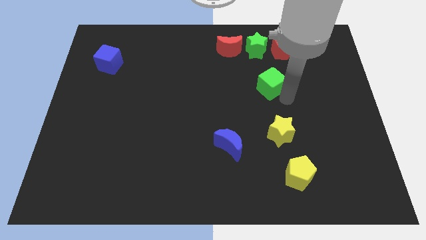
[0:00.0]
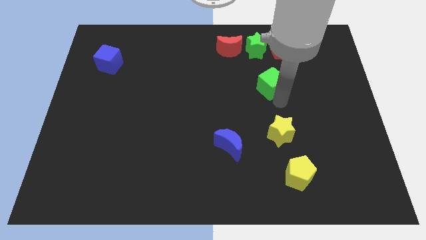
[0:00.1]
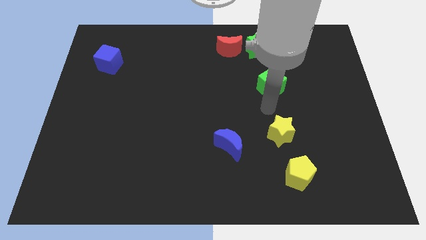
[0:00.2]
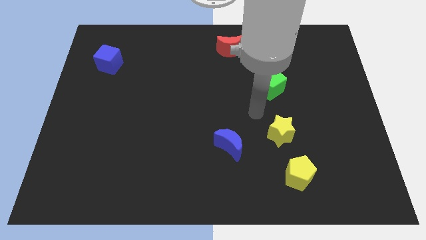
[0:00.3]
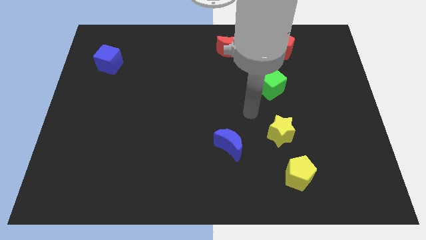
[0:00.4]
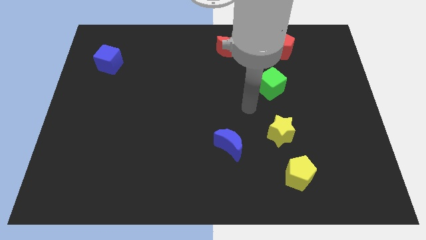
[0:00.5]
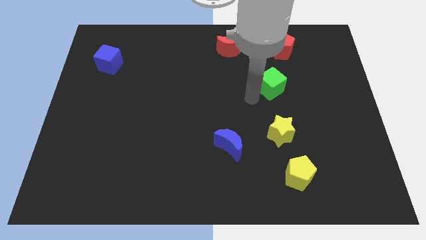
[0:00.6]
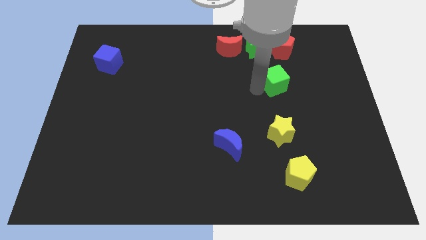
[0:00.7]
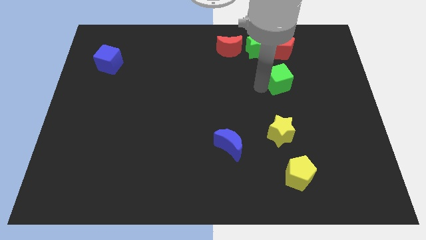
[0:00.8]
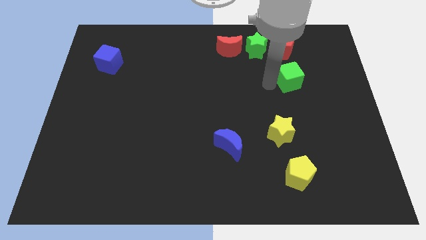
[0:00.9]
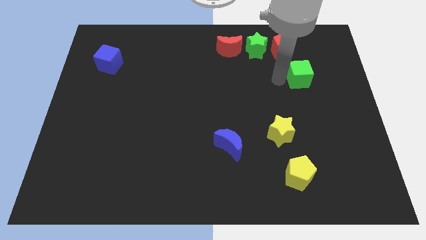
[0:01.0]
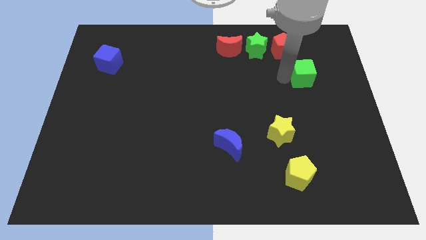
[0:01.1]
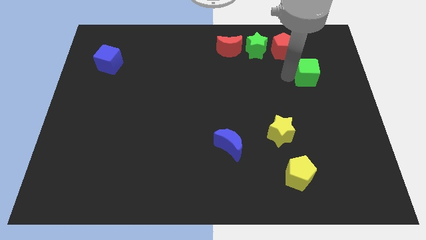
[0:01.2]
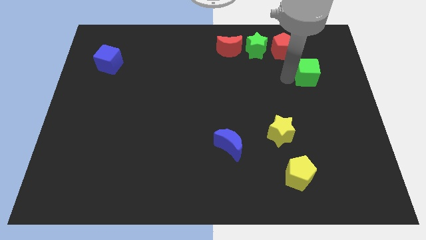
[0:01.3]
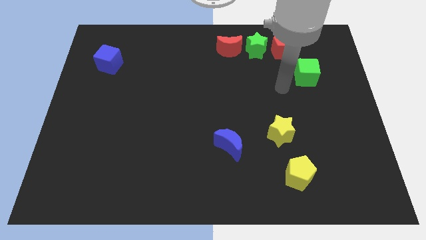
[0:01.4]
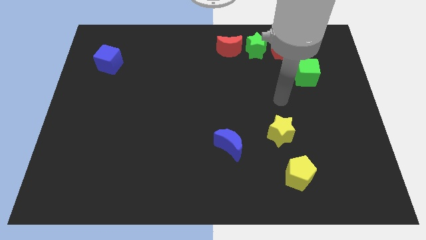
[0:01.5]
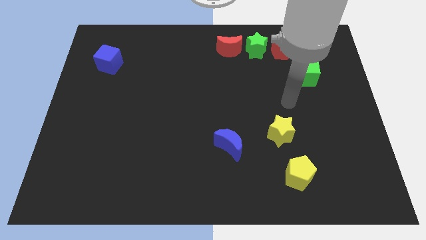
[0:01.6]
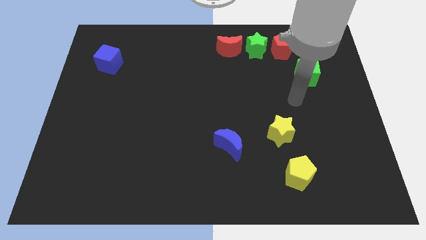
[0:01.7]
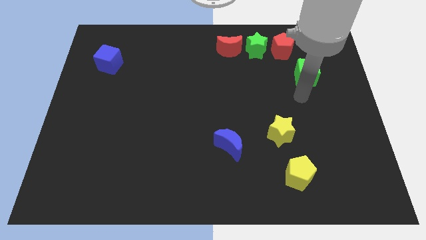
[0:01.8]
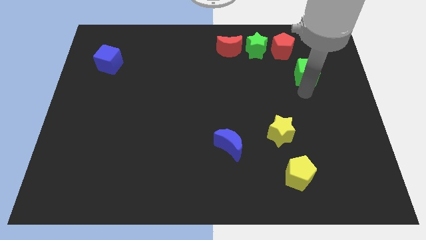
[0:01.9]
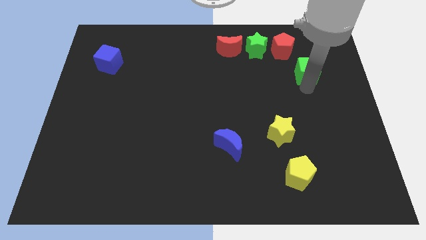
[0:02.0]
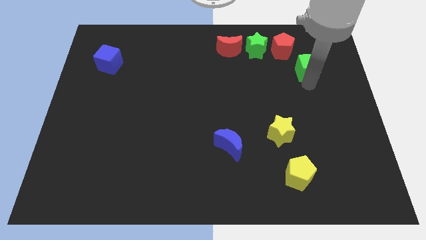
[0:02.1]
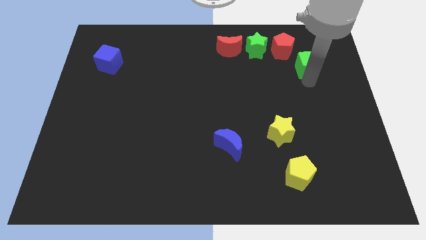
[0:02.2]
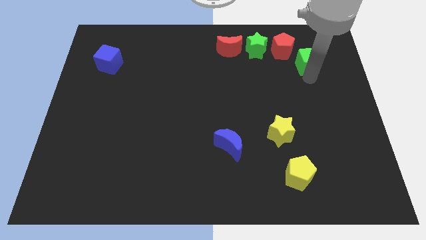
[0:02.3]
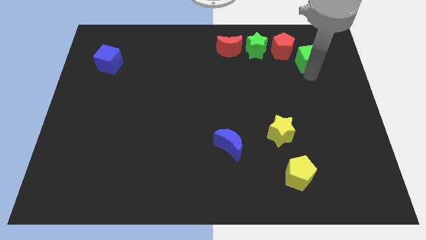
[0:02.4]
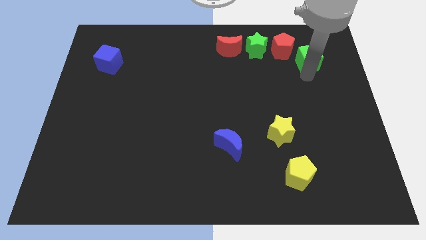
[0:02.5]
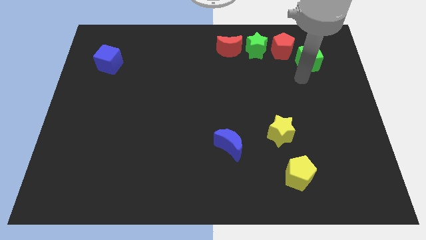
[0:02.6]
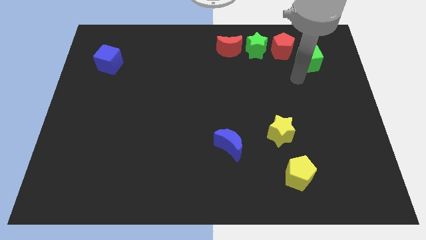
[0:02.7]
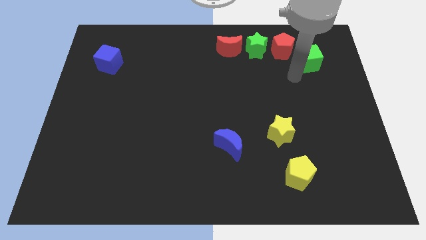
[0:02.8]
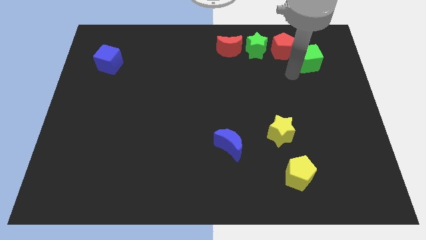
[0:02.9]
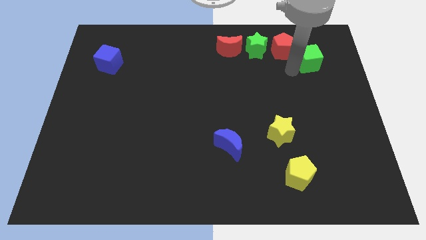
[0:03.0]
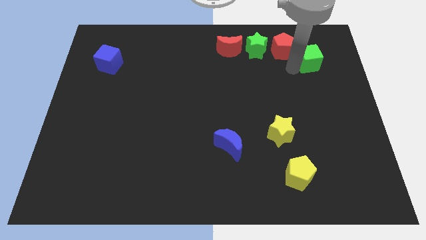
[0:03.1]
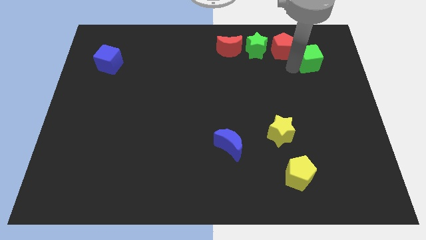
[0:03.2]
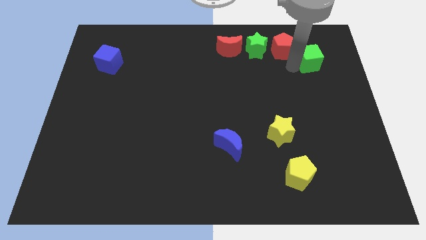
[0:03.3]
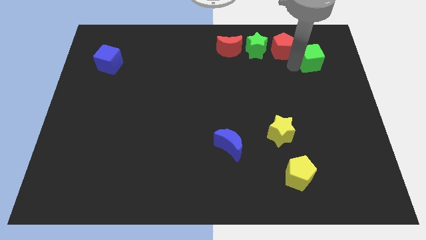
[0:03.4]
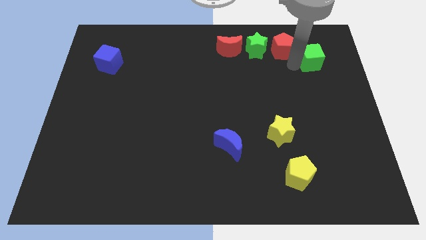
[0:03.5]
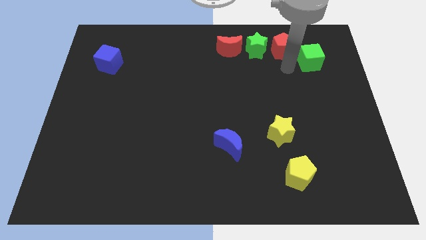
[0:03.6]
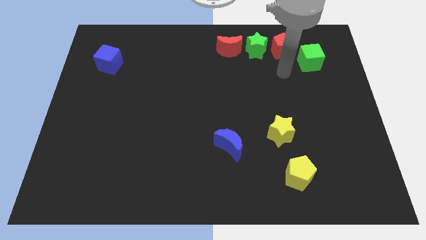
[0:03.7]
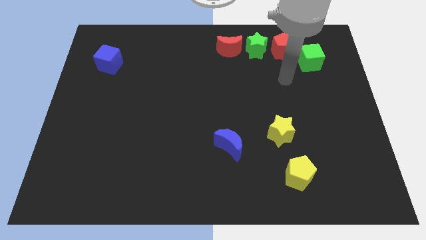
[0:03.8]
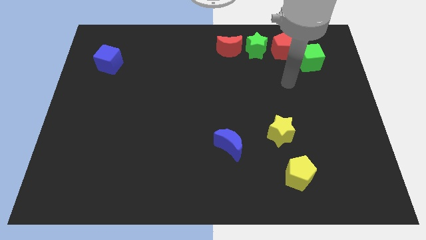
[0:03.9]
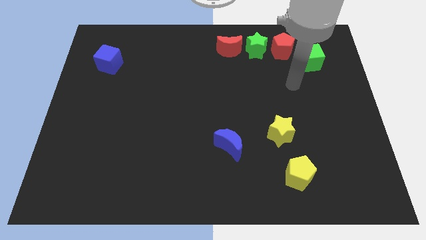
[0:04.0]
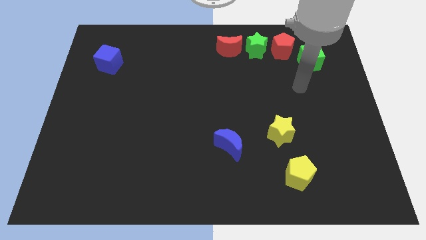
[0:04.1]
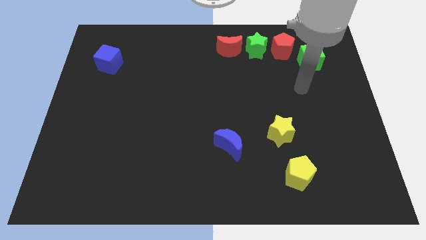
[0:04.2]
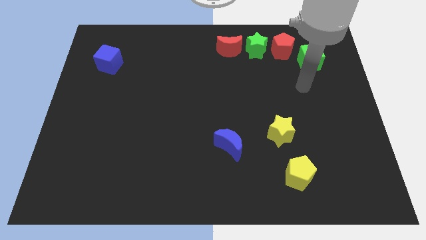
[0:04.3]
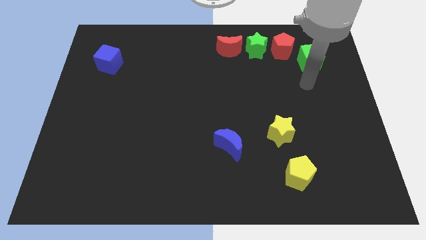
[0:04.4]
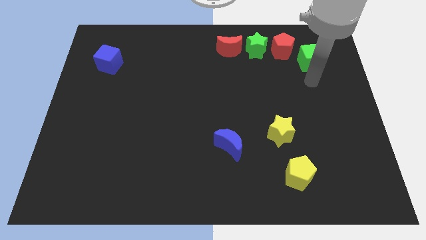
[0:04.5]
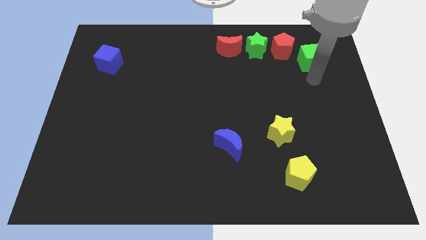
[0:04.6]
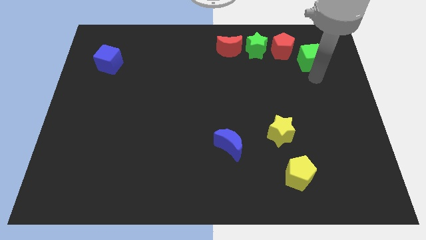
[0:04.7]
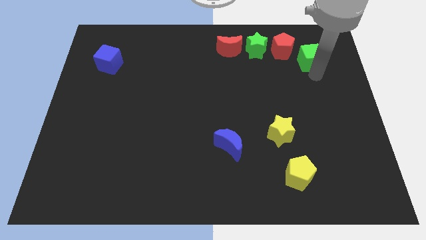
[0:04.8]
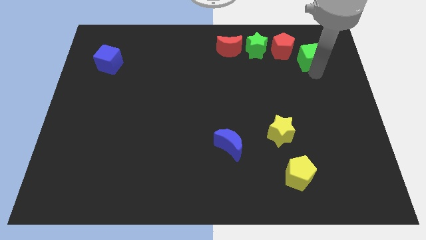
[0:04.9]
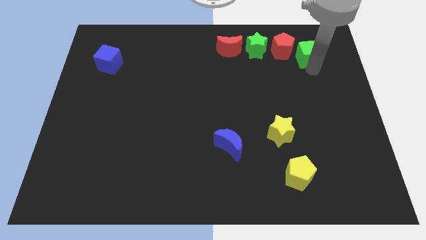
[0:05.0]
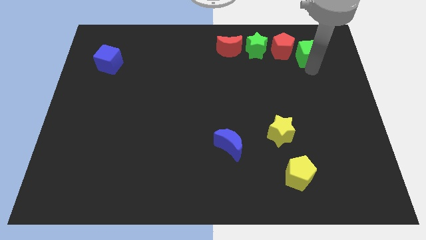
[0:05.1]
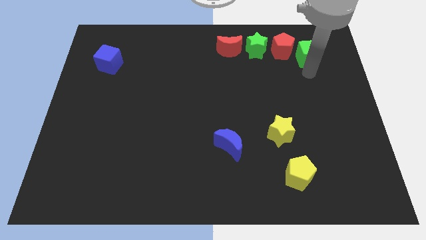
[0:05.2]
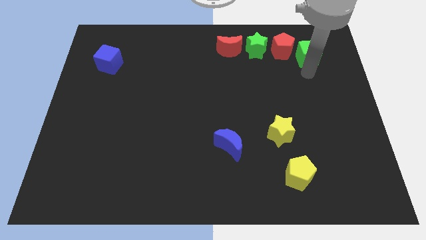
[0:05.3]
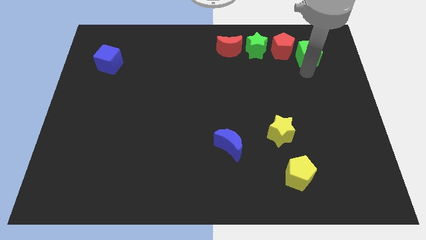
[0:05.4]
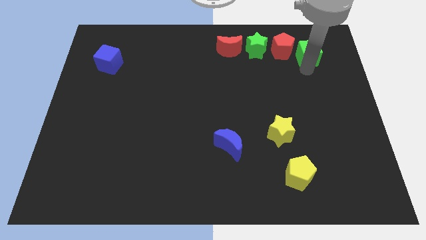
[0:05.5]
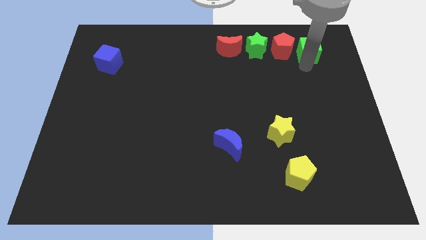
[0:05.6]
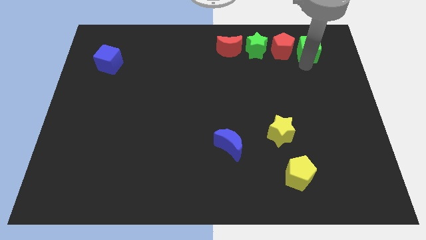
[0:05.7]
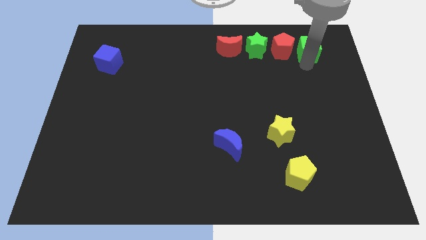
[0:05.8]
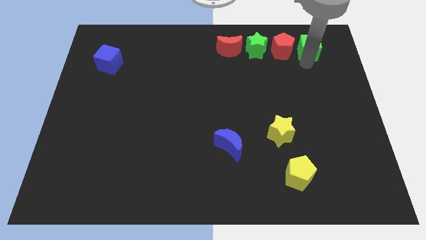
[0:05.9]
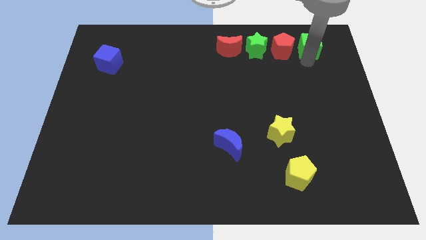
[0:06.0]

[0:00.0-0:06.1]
place green cube to the right of red pentagon

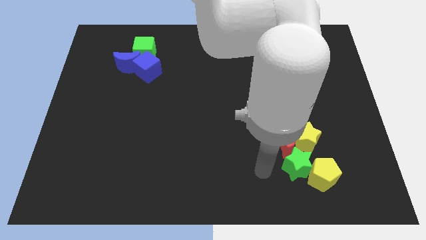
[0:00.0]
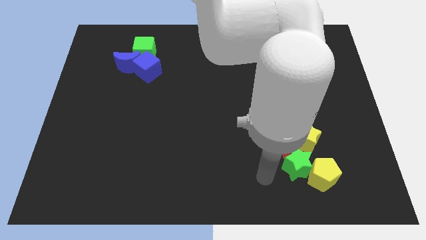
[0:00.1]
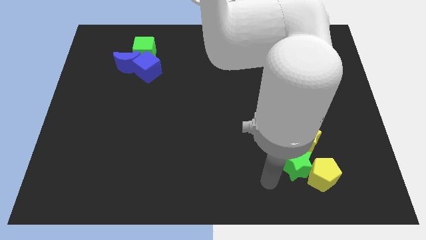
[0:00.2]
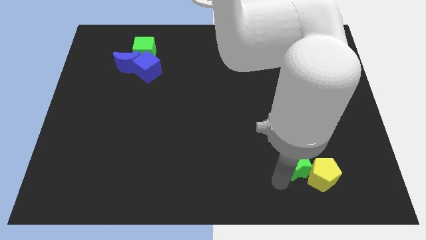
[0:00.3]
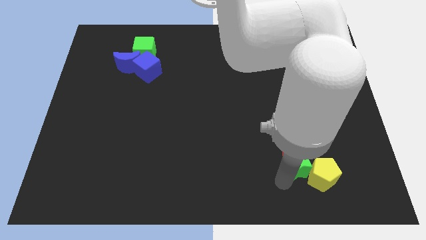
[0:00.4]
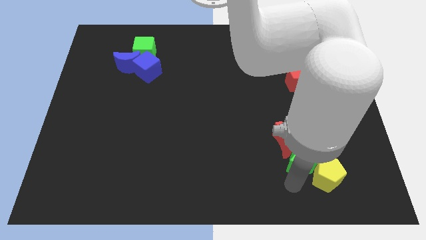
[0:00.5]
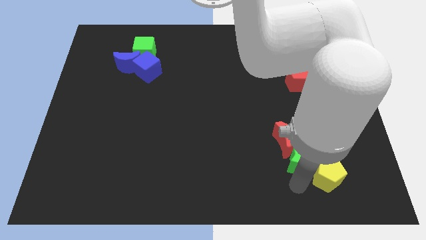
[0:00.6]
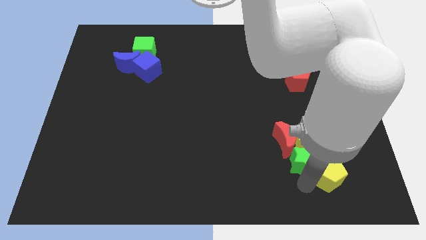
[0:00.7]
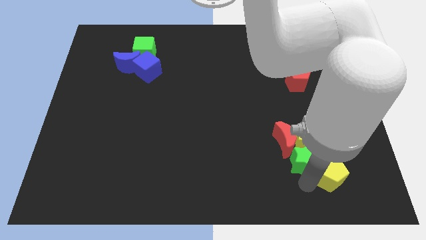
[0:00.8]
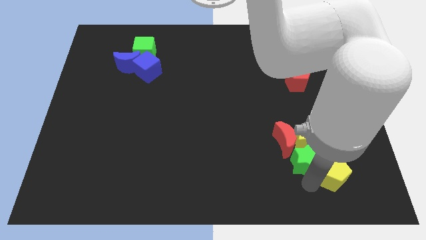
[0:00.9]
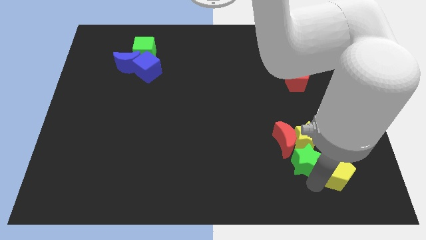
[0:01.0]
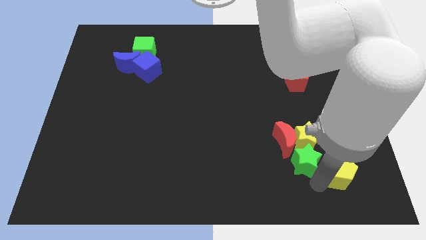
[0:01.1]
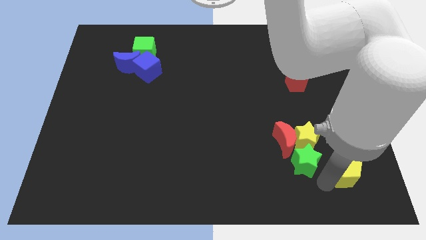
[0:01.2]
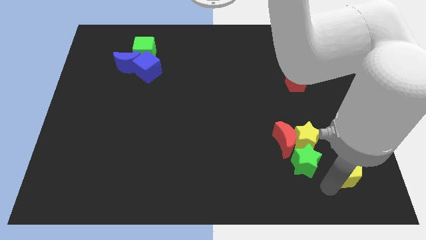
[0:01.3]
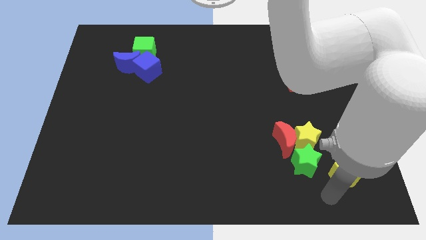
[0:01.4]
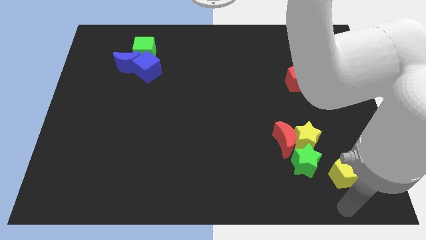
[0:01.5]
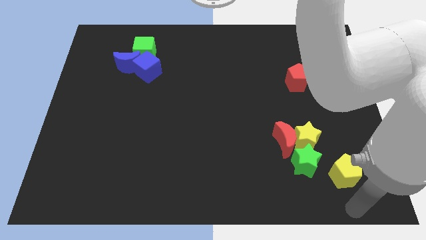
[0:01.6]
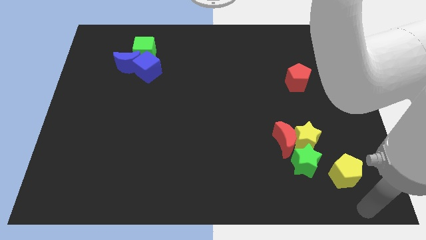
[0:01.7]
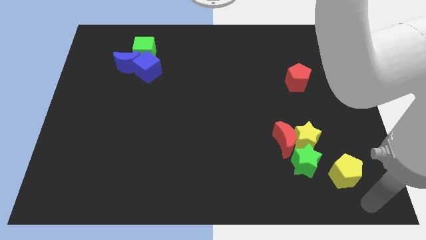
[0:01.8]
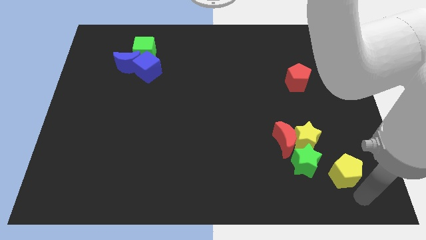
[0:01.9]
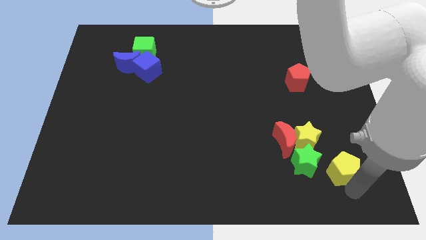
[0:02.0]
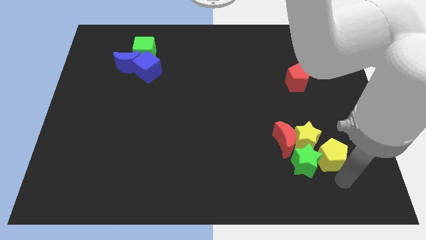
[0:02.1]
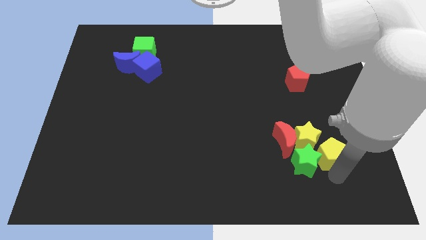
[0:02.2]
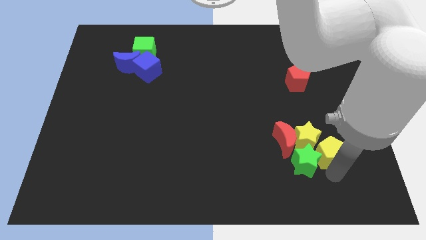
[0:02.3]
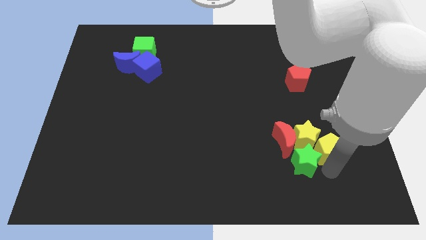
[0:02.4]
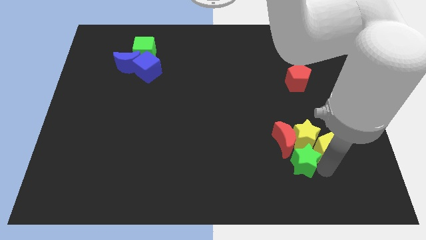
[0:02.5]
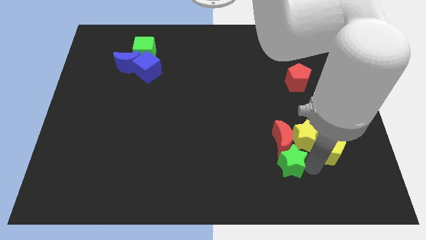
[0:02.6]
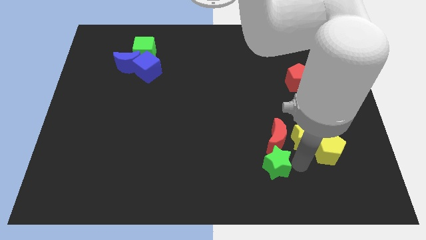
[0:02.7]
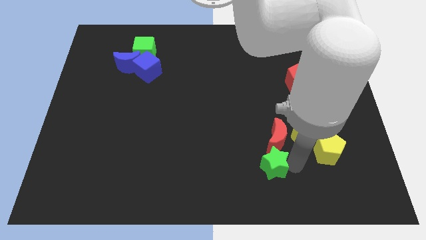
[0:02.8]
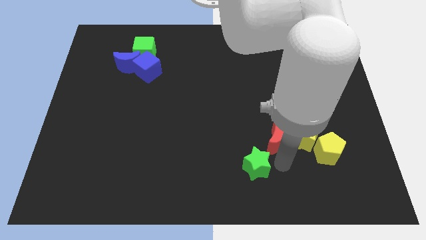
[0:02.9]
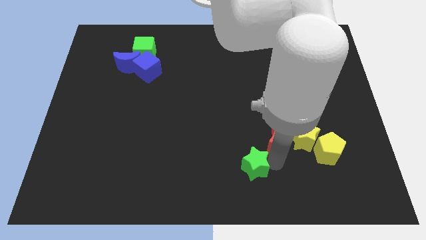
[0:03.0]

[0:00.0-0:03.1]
separate green star and yellow blocks
